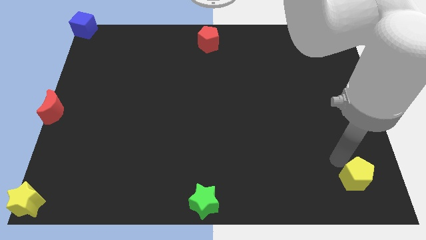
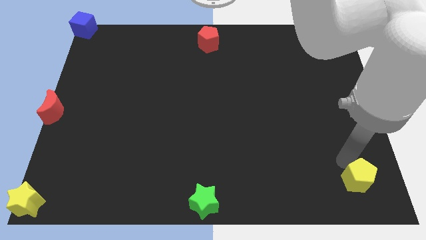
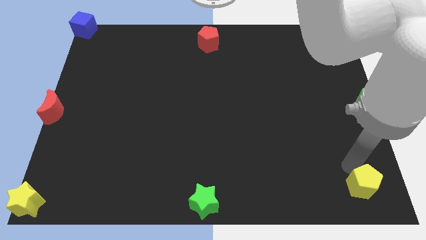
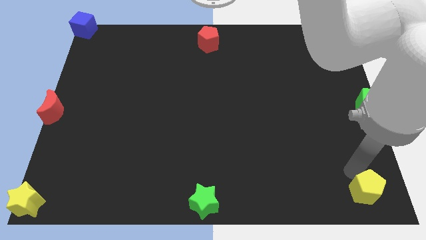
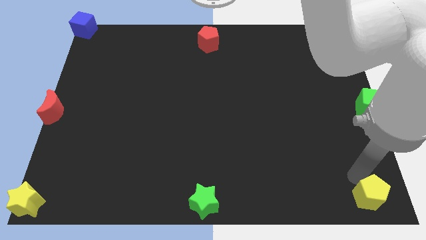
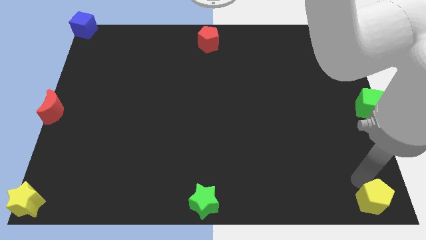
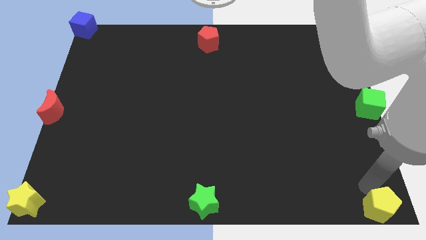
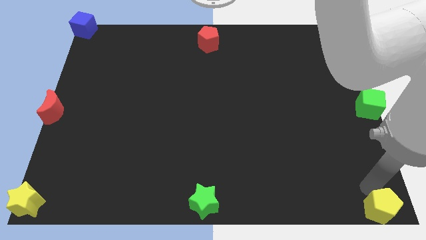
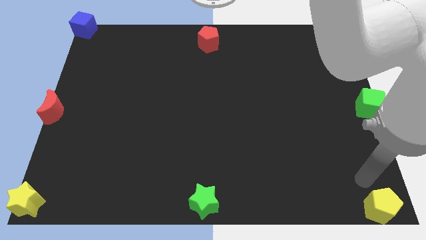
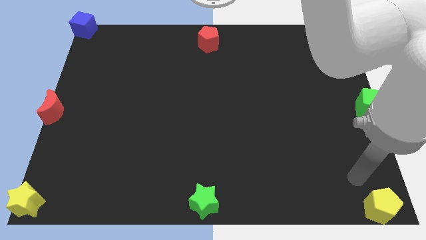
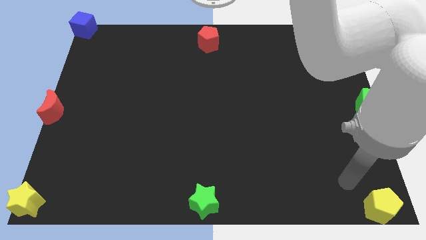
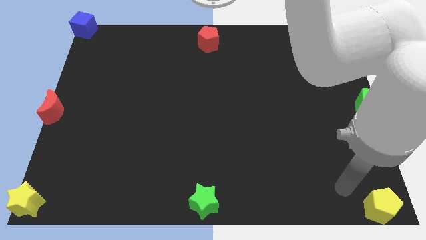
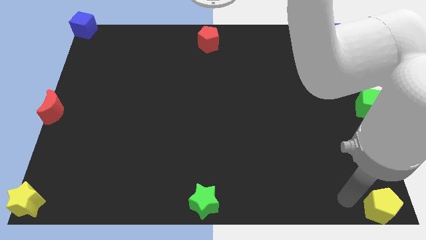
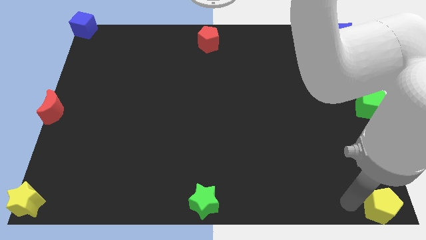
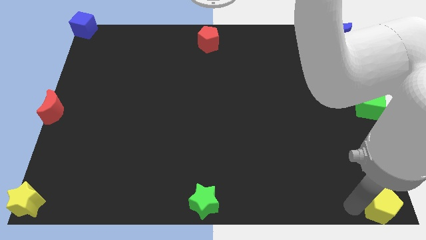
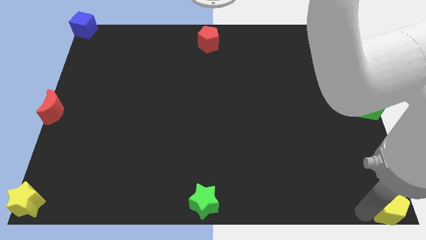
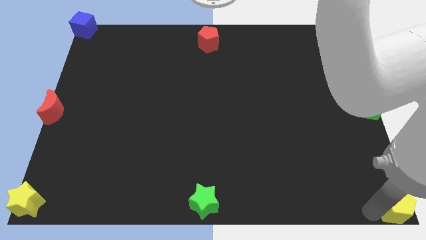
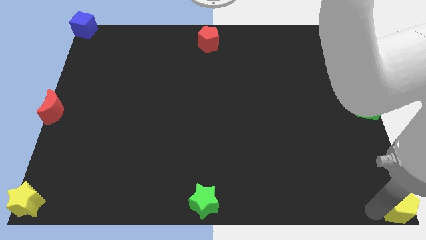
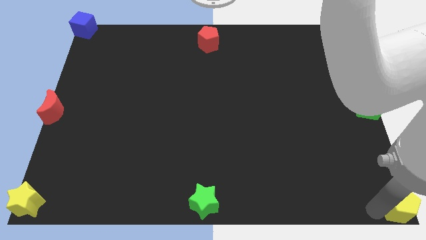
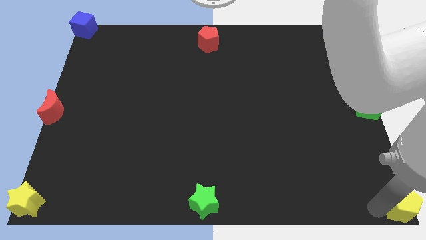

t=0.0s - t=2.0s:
push the yellow pentagon to the botton right of the board

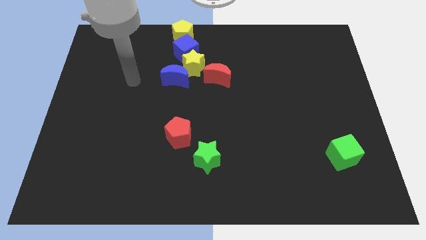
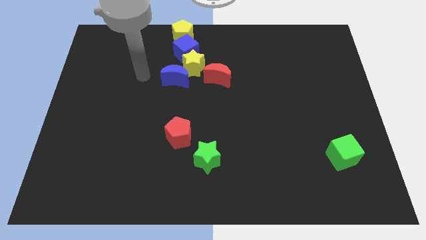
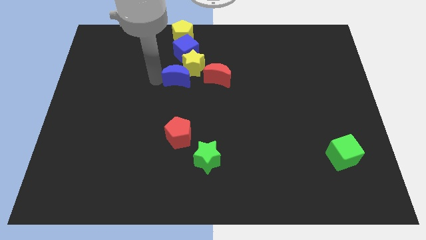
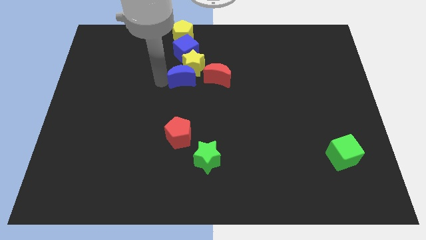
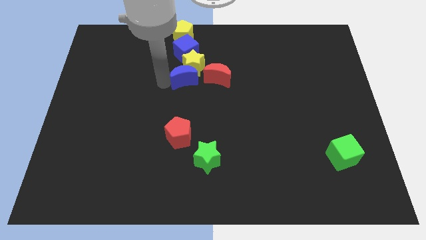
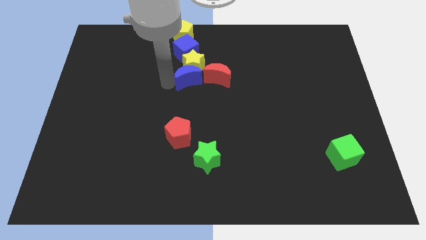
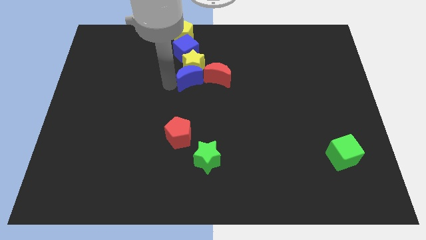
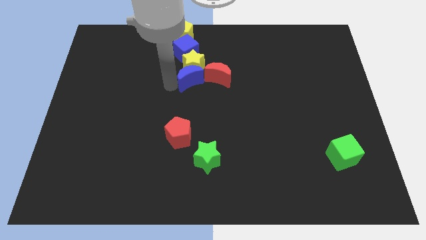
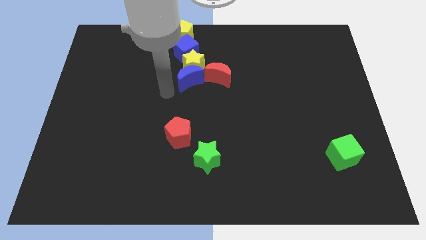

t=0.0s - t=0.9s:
push blue moon into red moon

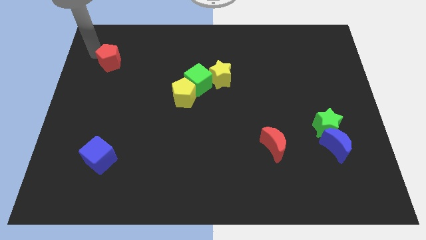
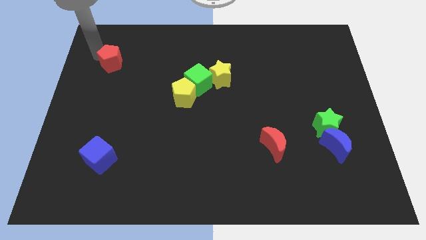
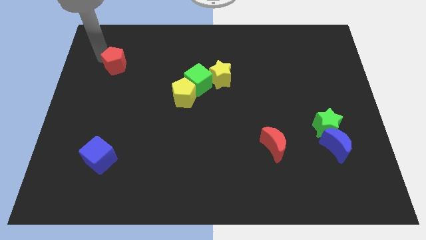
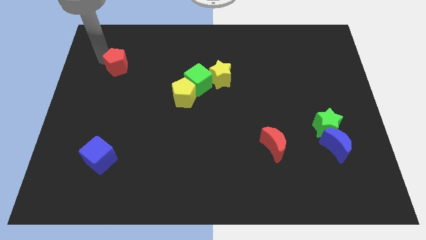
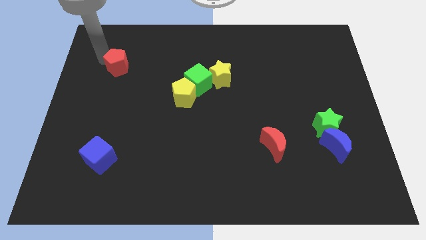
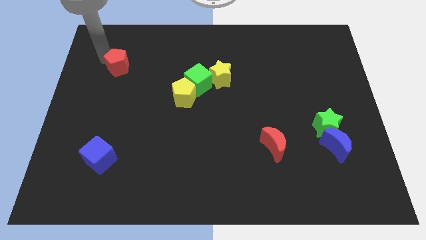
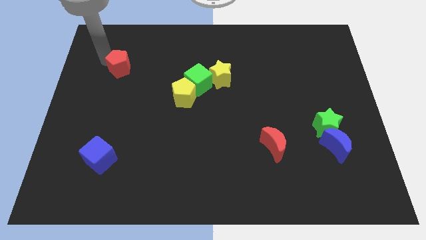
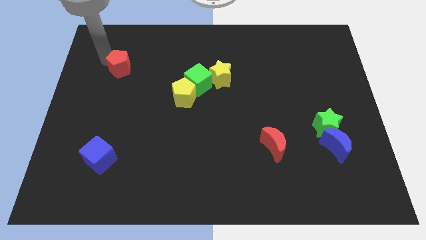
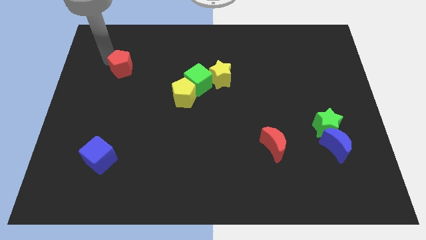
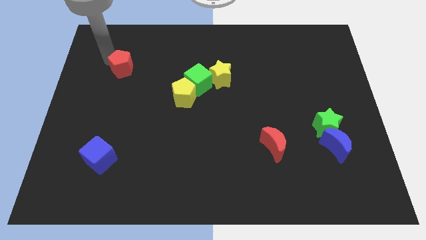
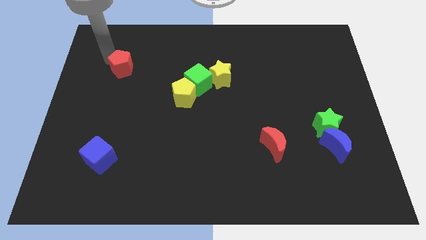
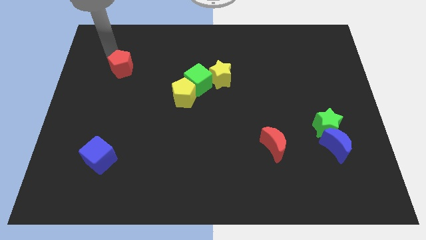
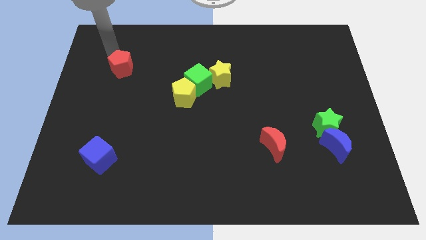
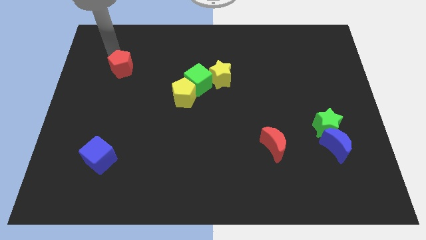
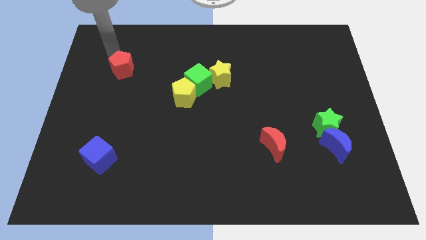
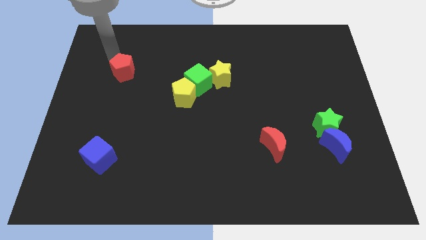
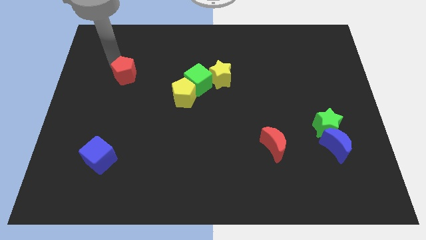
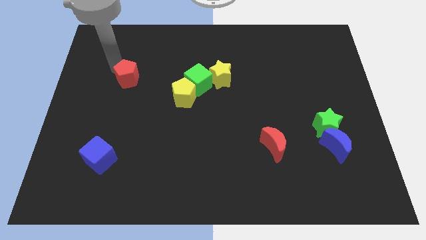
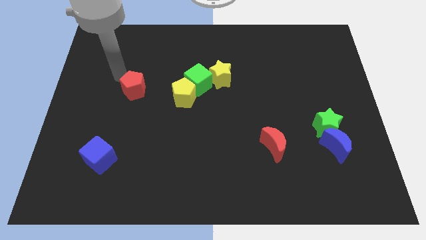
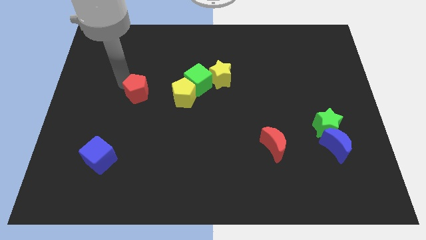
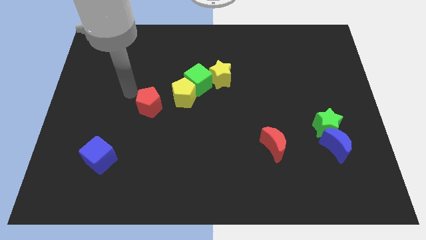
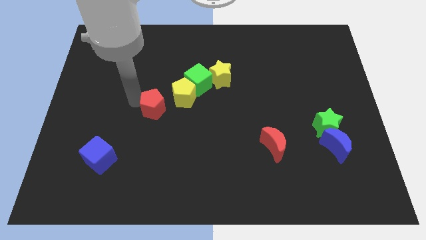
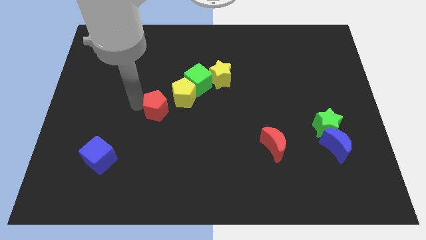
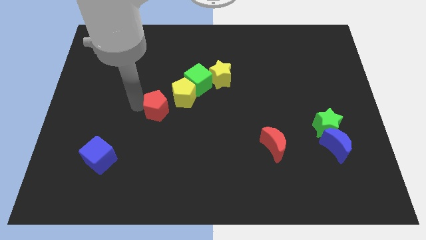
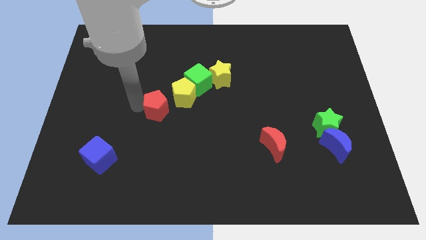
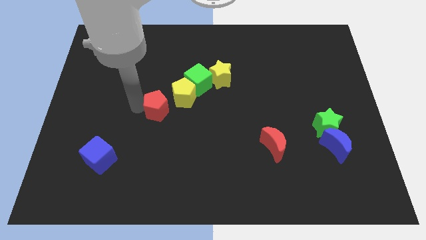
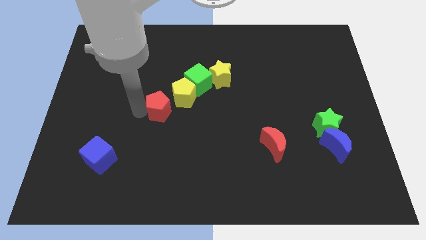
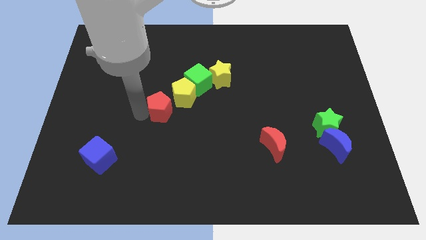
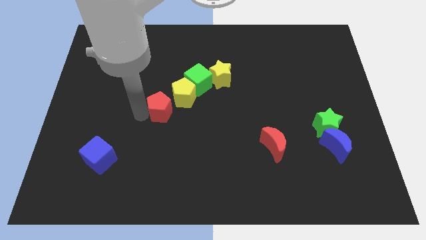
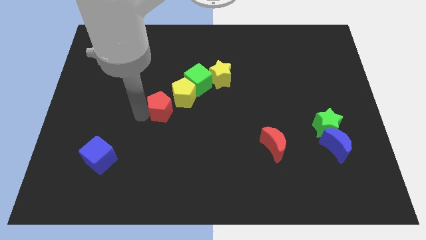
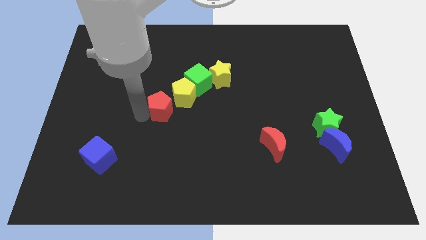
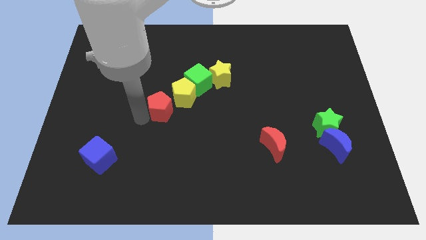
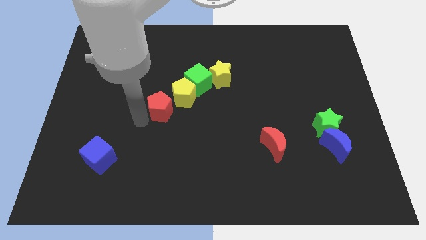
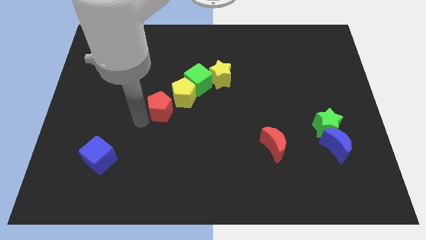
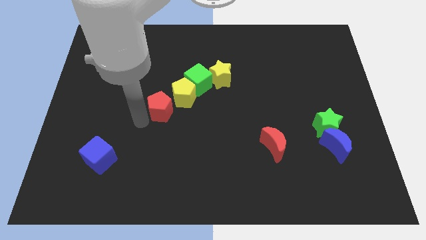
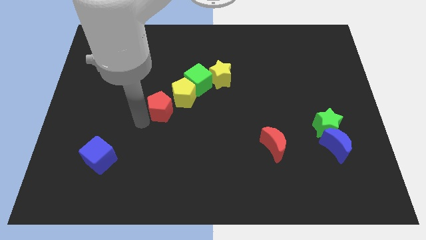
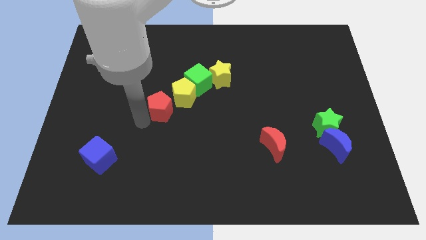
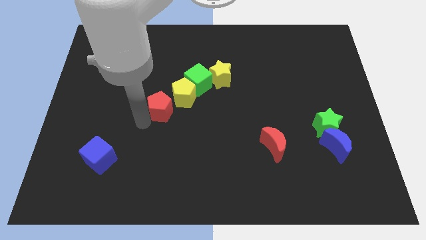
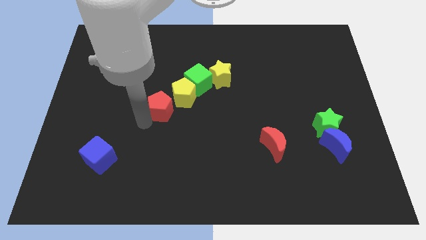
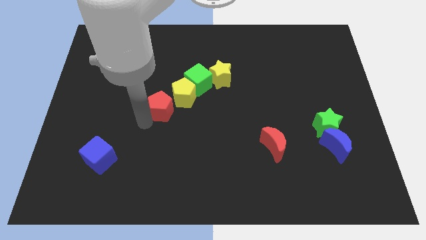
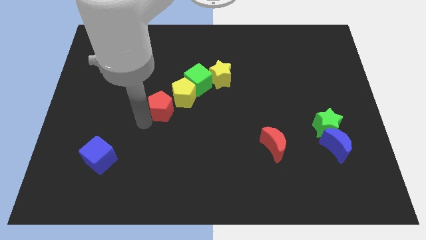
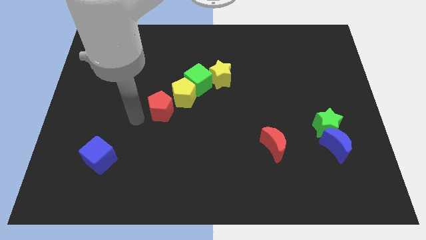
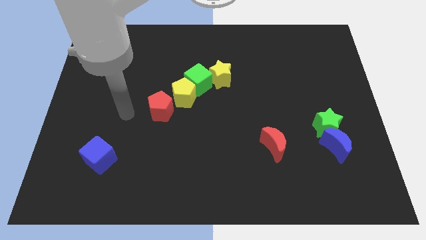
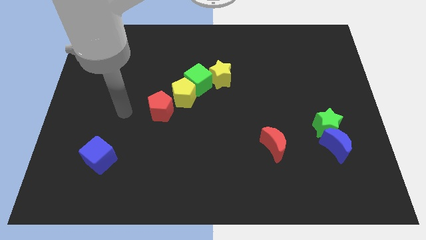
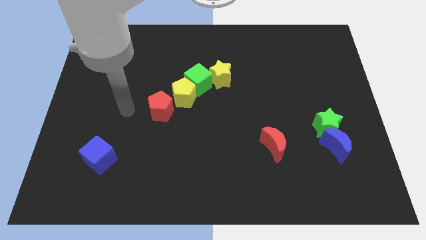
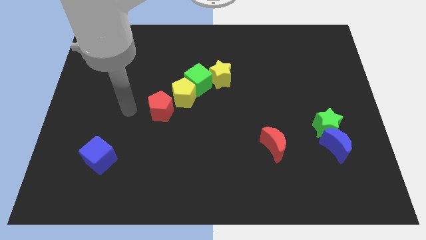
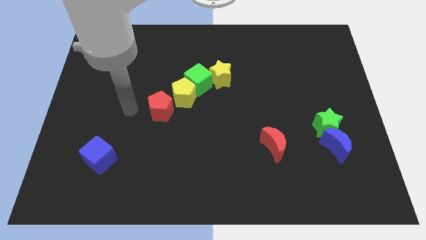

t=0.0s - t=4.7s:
place the red pentagon close to the yellow pentagon

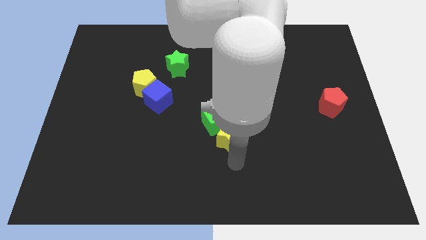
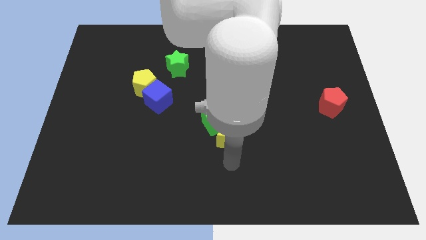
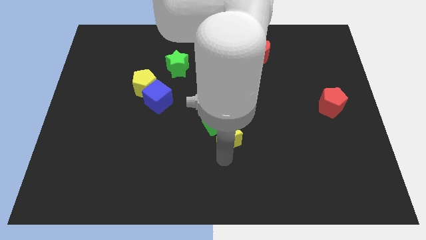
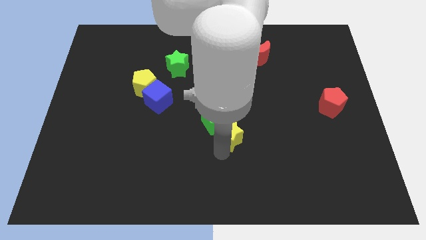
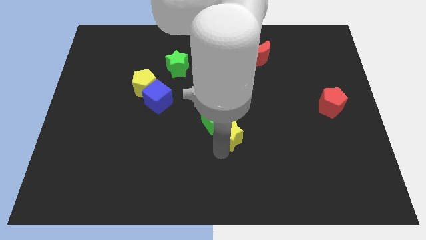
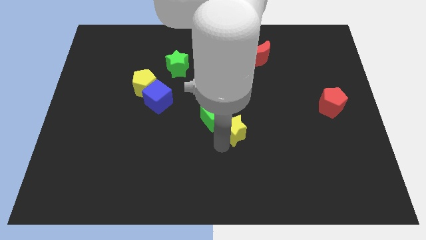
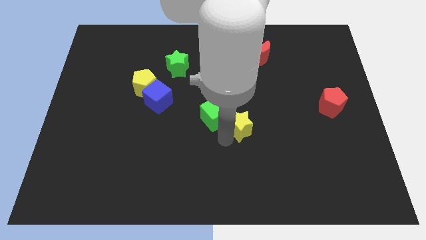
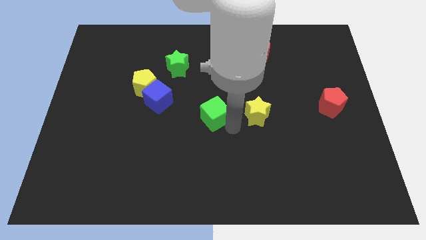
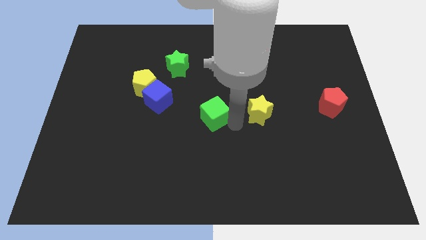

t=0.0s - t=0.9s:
place yellow star to the right of green cube

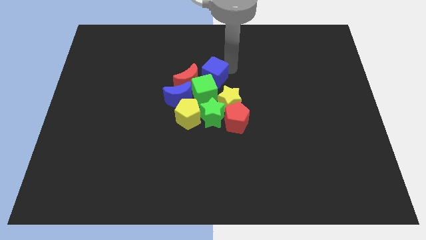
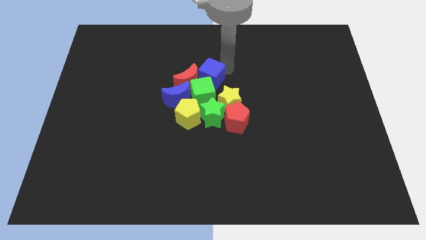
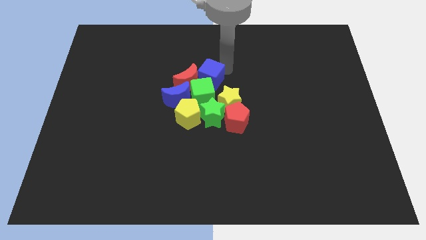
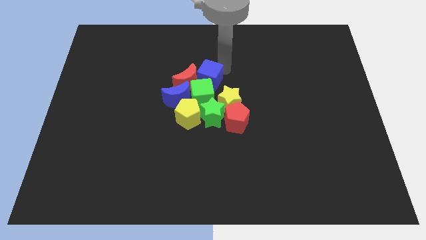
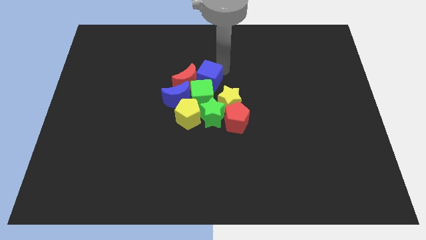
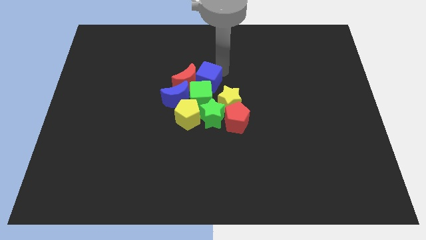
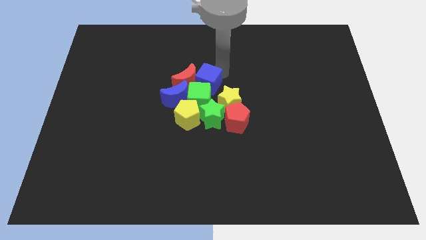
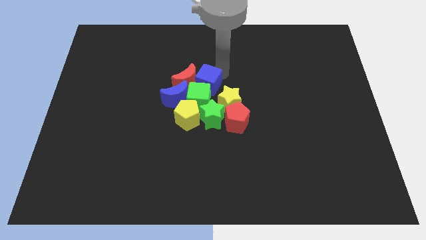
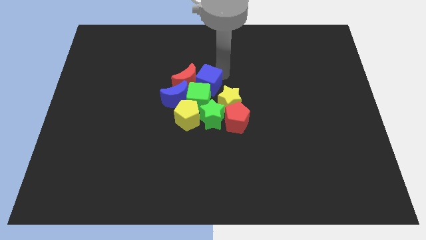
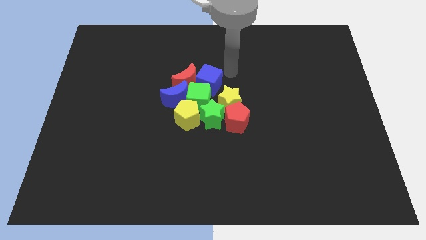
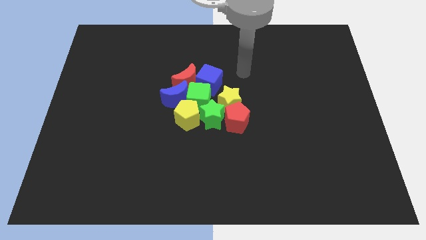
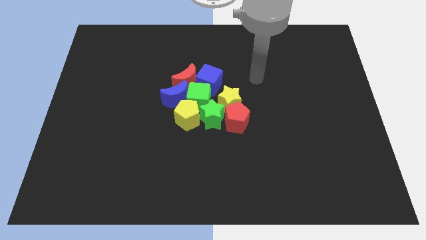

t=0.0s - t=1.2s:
push the blue cube into the green cube
